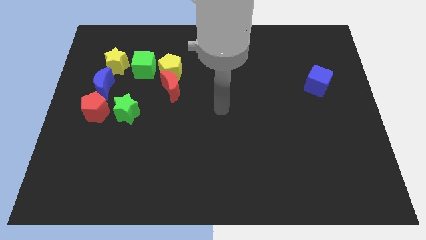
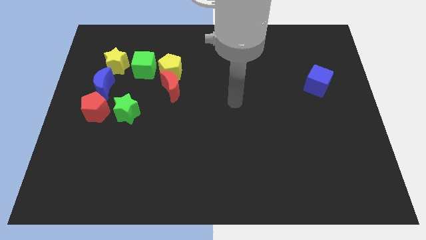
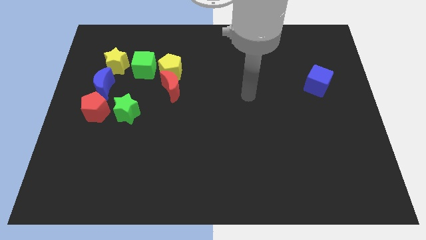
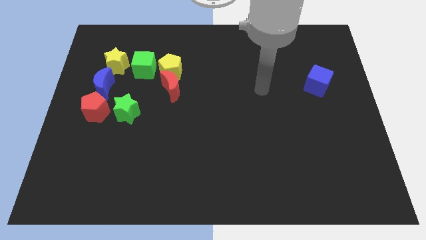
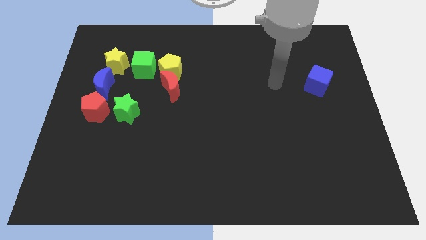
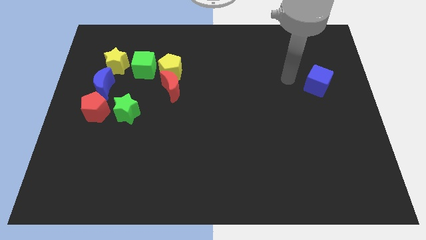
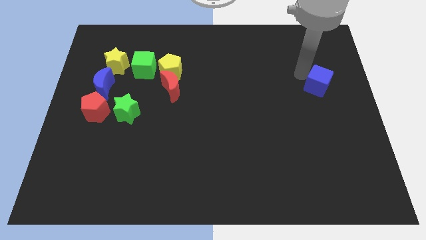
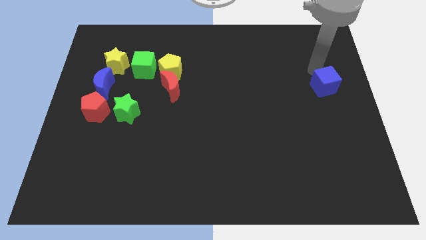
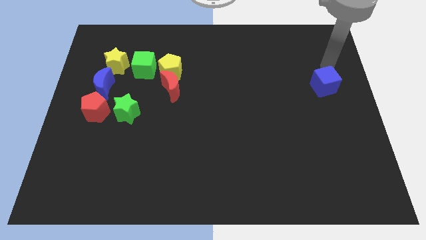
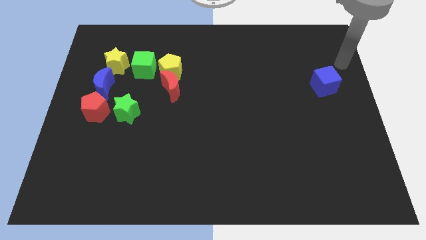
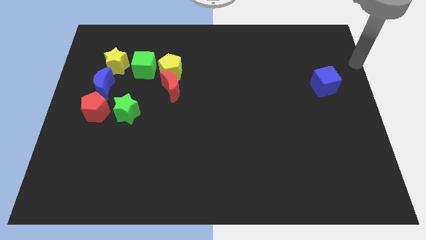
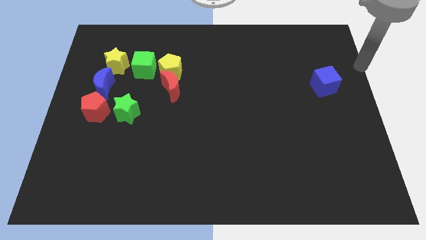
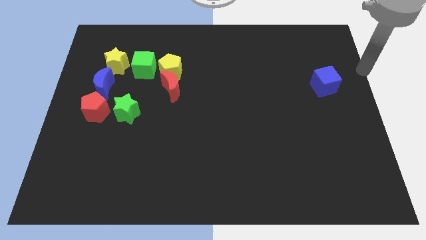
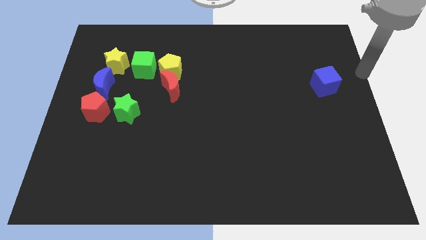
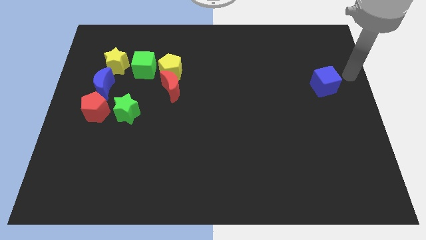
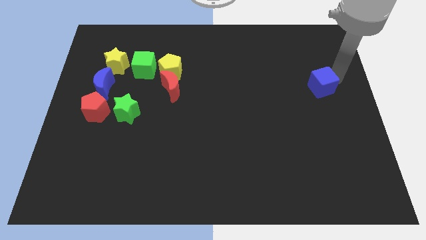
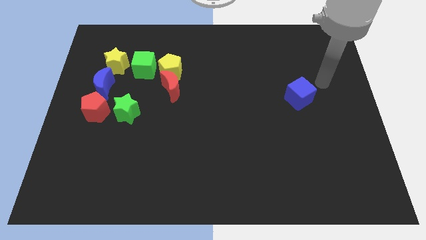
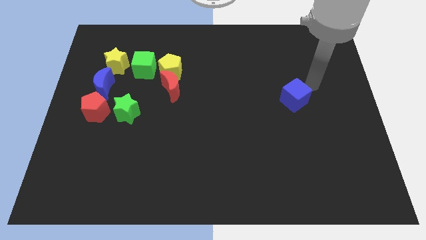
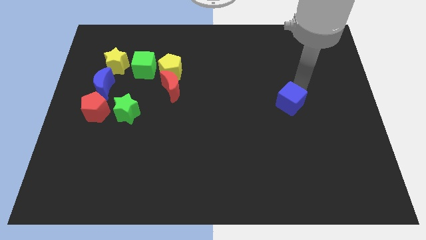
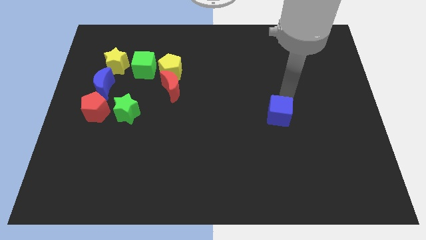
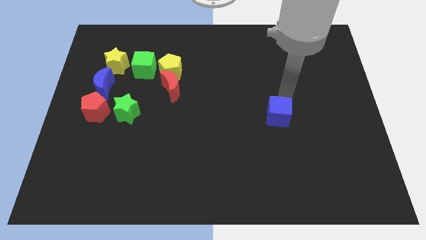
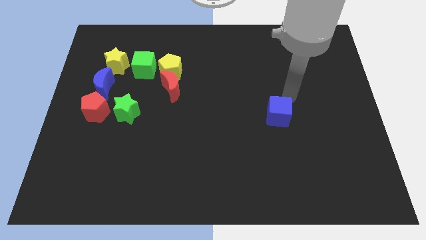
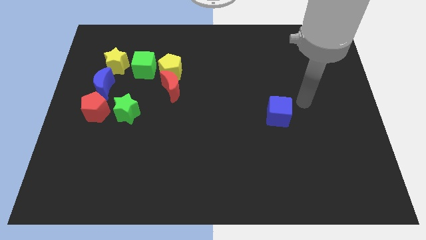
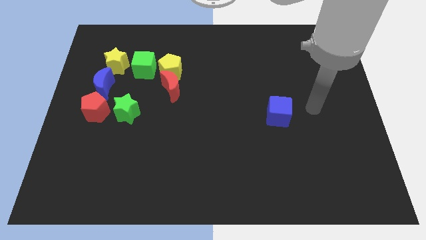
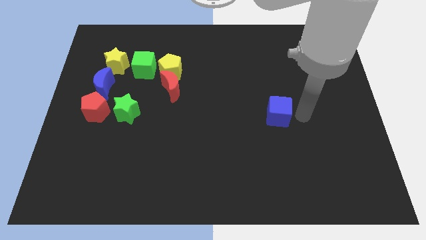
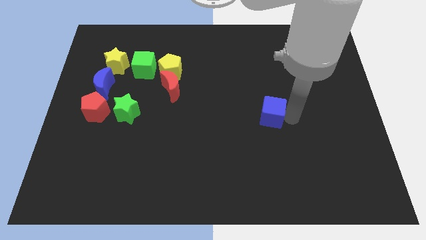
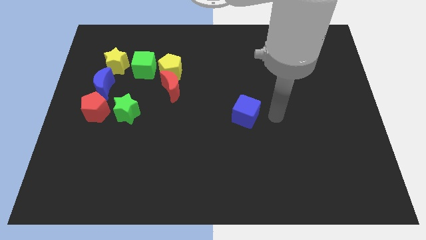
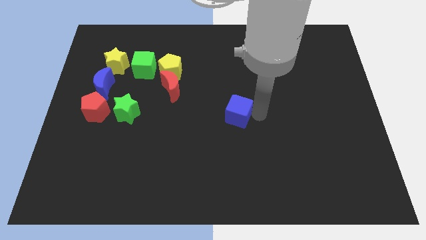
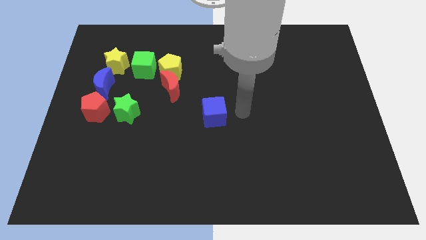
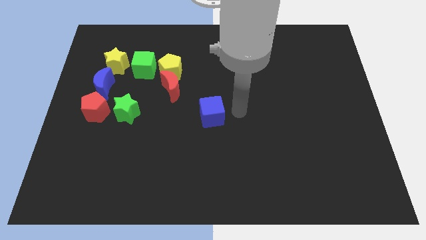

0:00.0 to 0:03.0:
slide blue cube at the center of the board

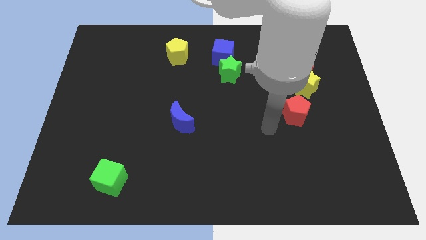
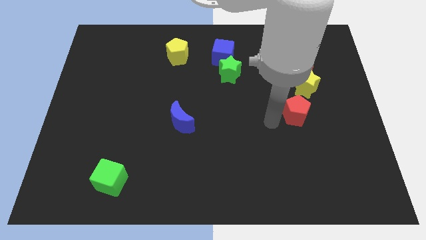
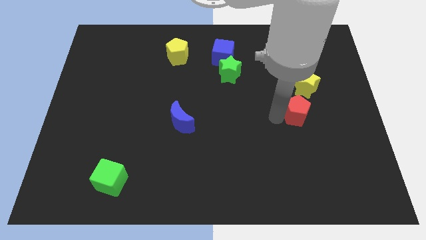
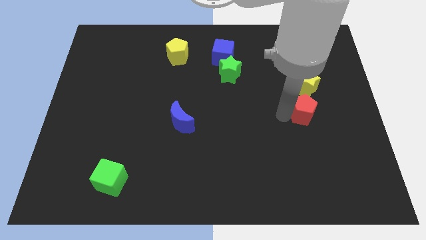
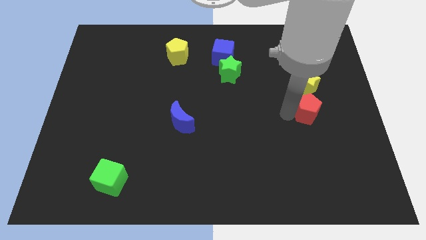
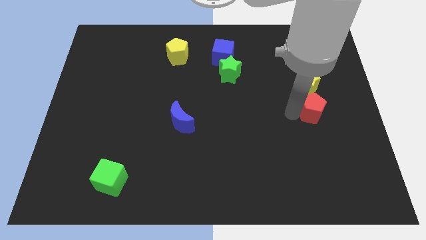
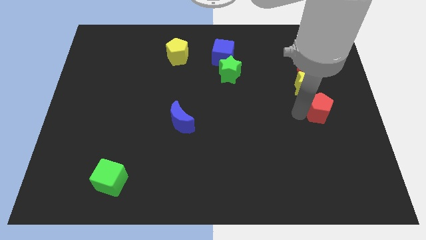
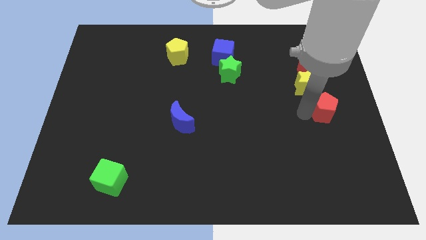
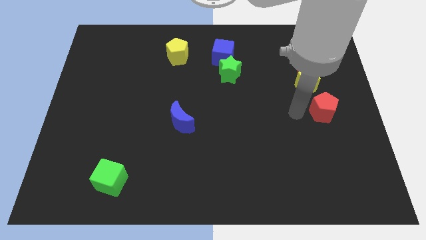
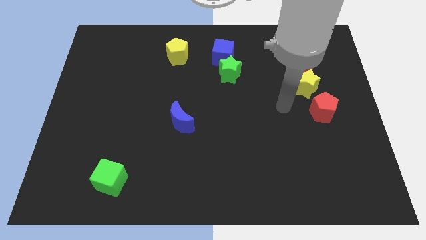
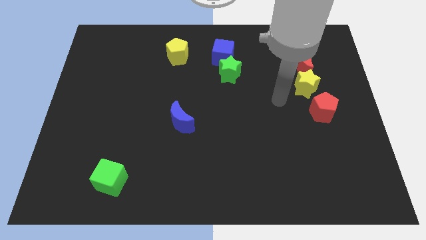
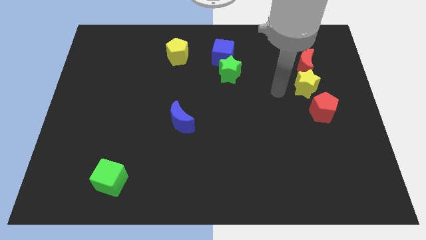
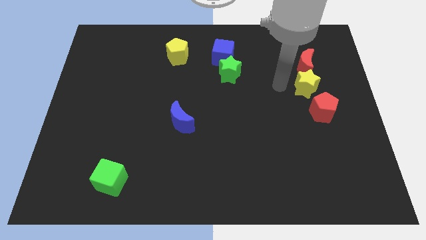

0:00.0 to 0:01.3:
push the red pentagon to the bottom right side of the yellow star

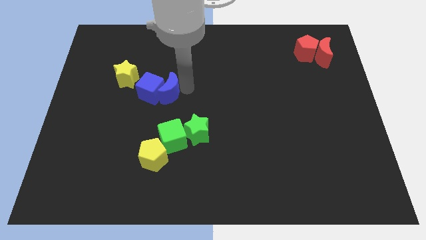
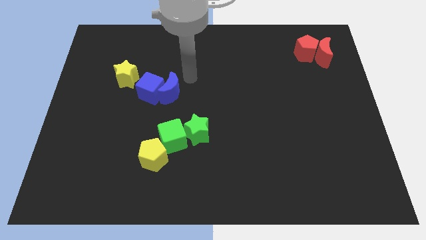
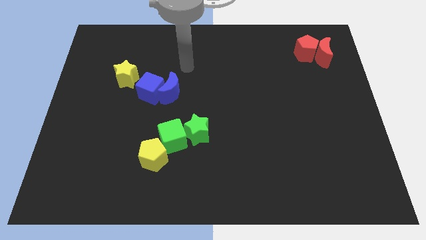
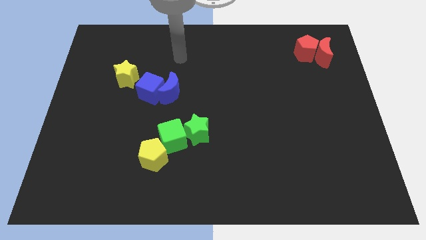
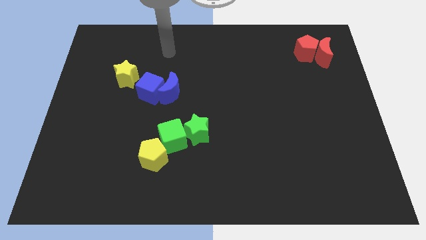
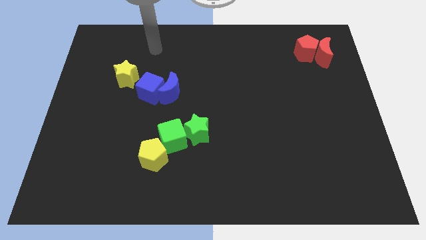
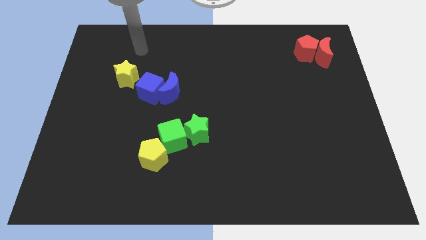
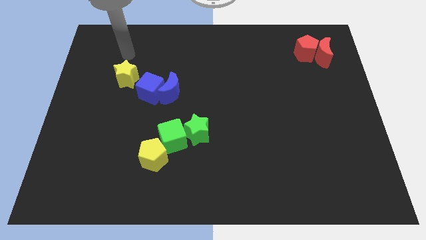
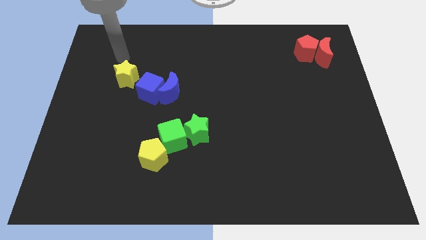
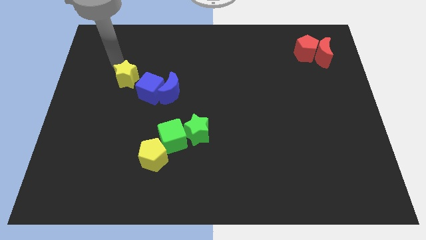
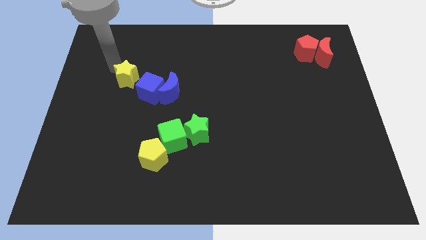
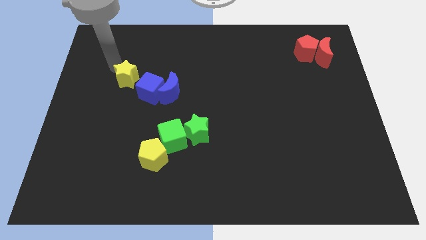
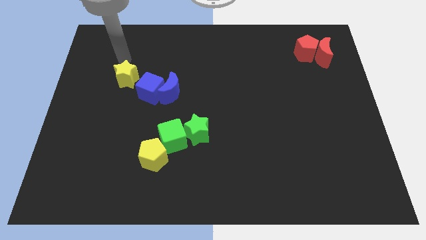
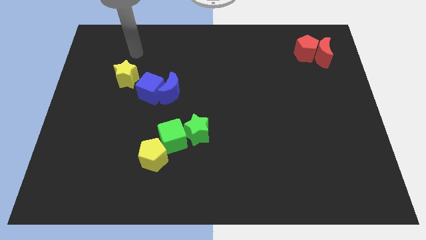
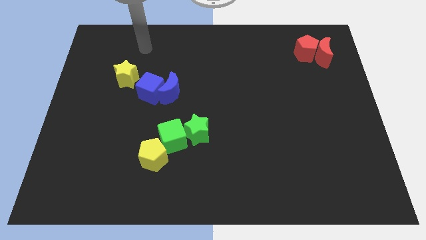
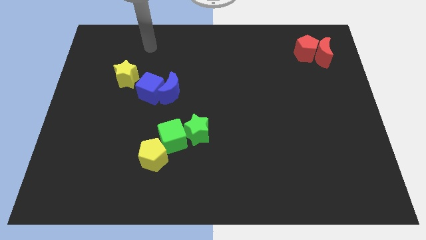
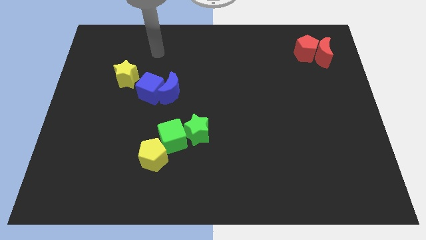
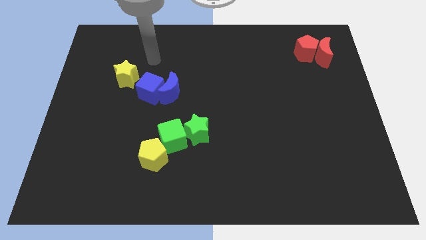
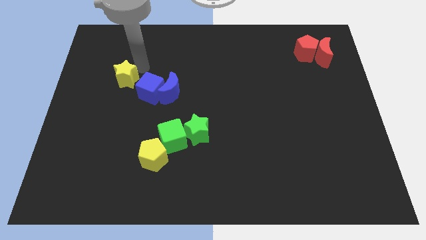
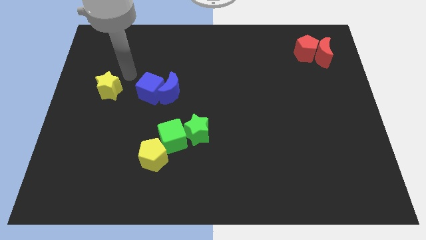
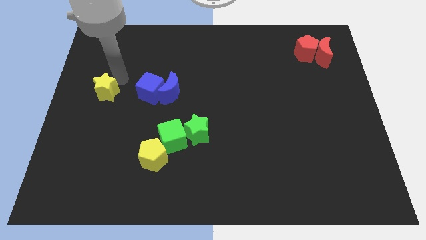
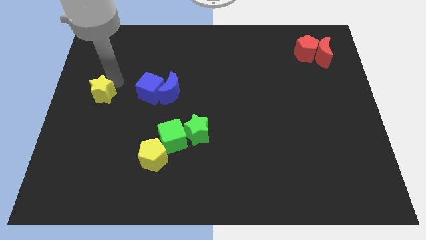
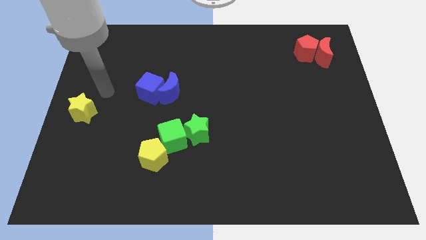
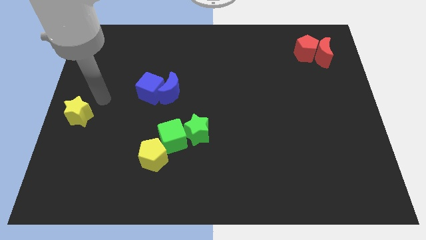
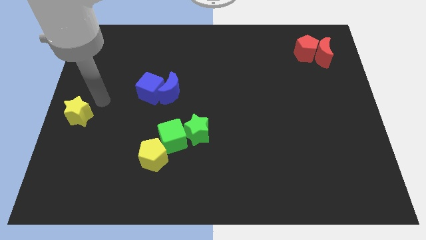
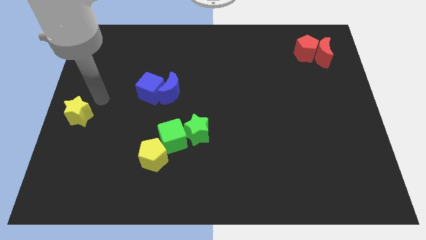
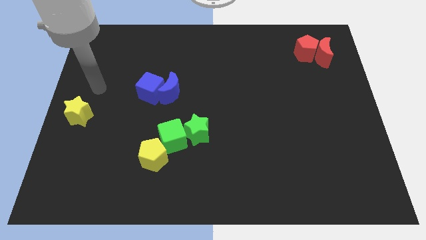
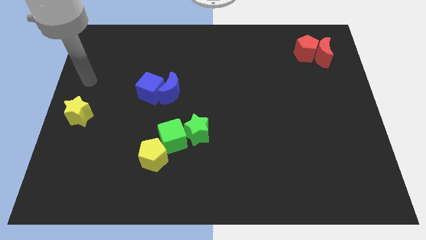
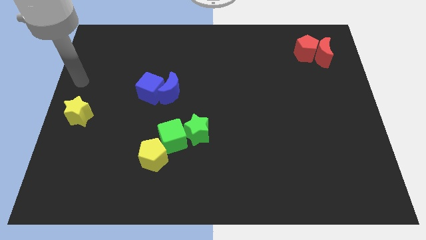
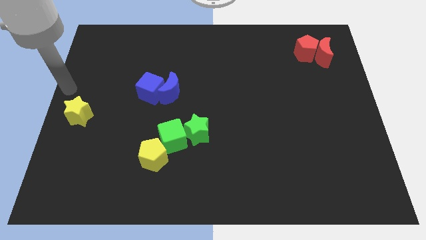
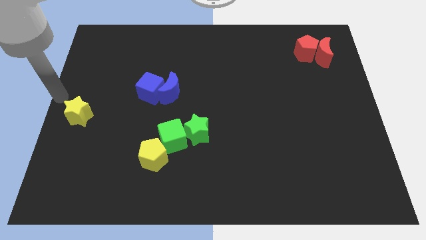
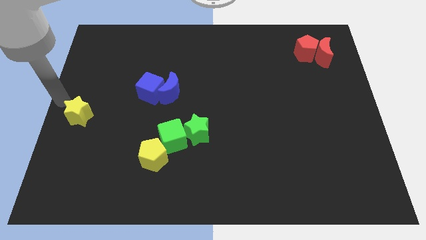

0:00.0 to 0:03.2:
push the yellow star downward

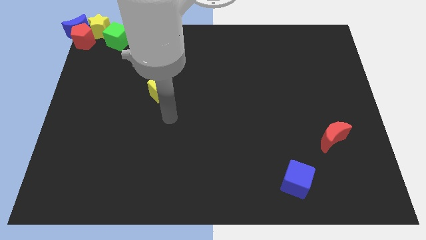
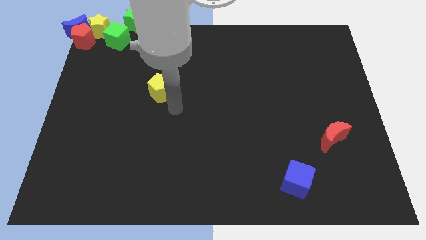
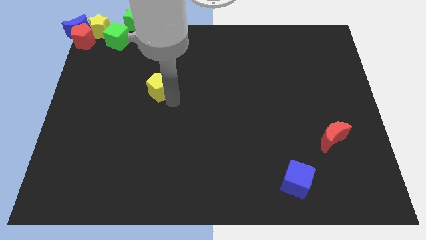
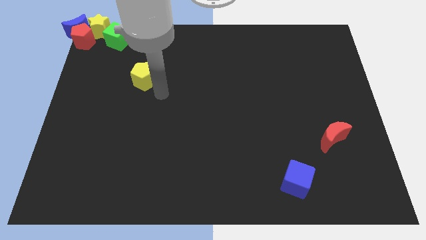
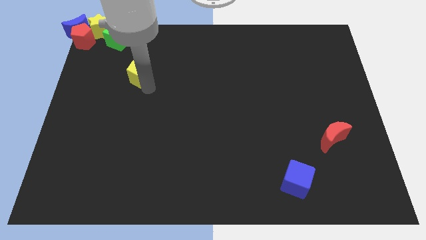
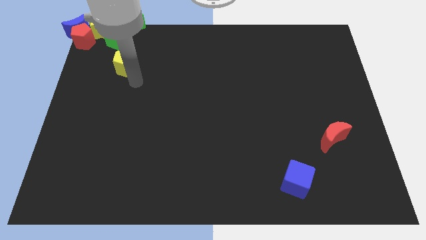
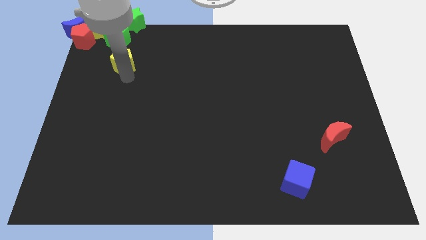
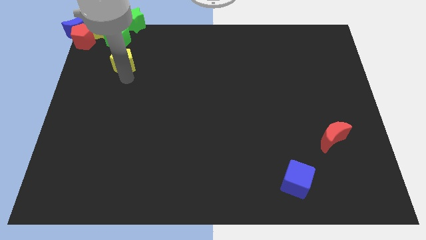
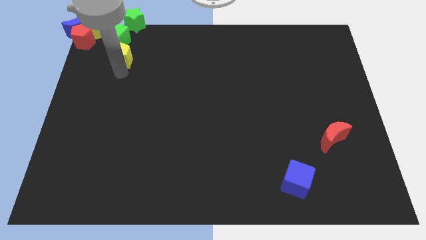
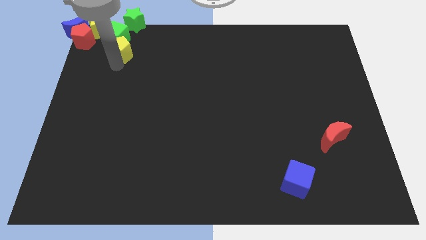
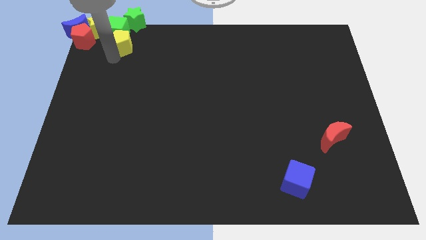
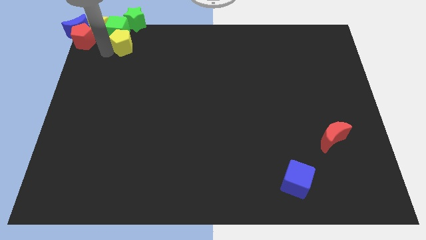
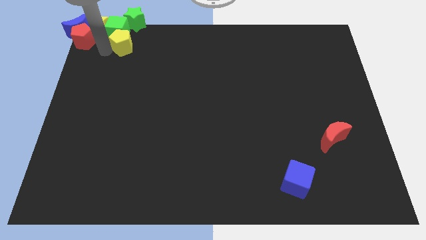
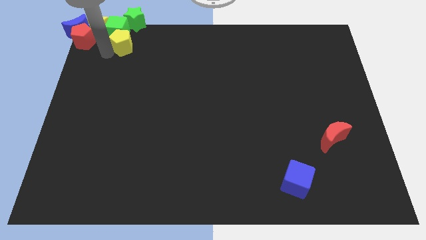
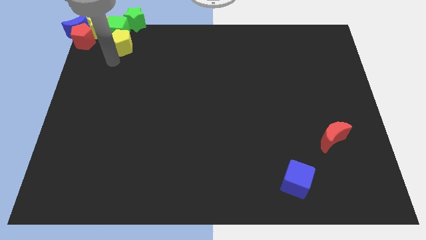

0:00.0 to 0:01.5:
move the yellow pentagon bottom right to the green cube
